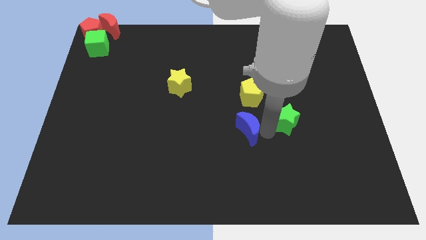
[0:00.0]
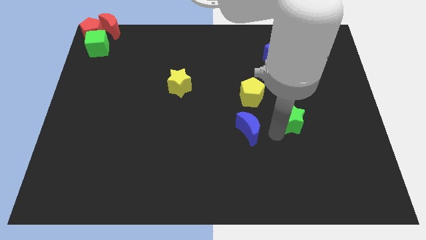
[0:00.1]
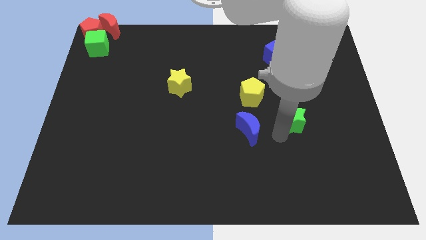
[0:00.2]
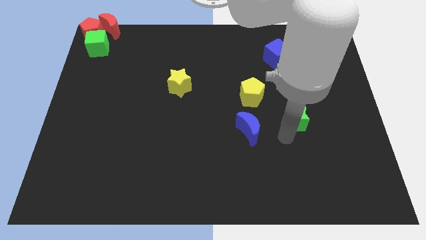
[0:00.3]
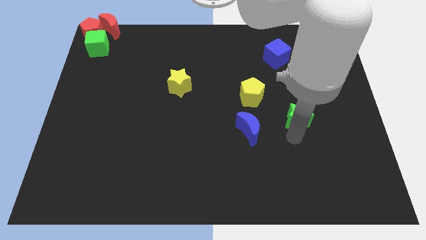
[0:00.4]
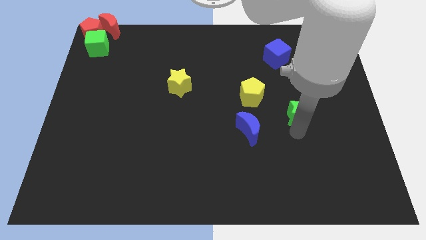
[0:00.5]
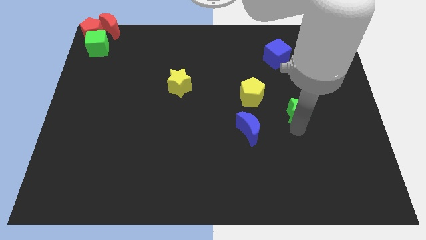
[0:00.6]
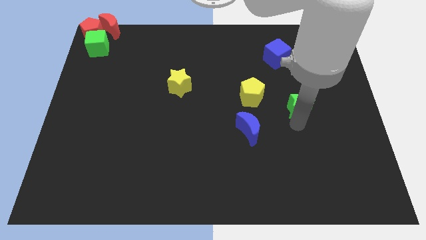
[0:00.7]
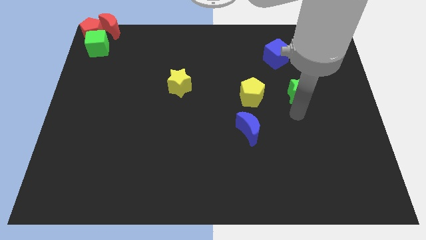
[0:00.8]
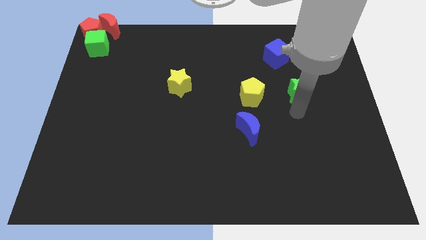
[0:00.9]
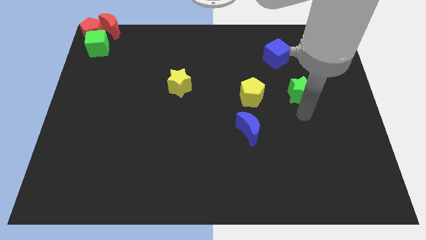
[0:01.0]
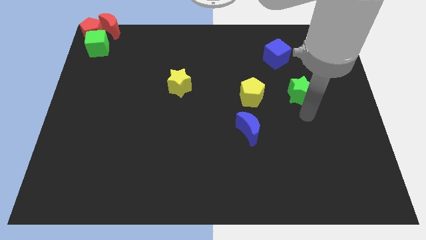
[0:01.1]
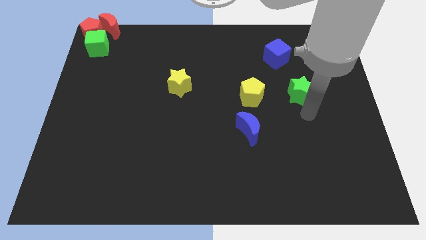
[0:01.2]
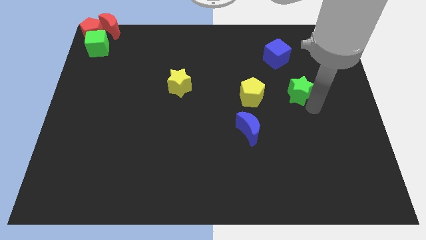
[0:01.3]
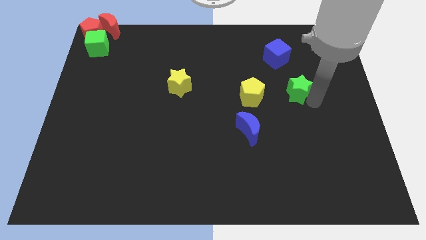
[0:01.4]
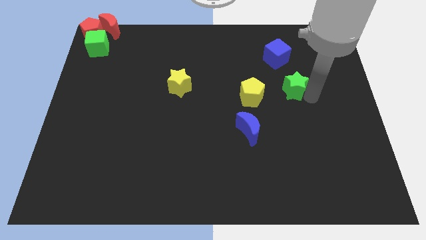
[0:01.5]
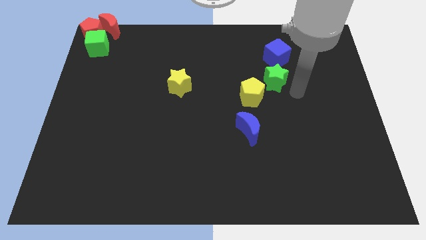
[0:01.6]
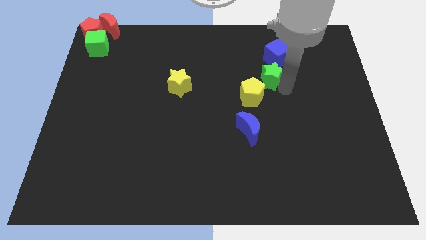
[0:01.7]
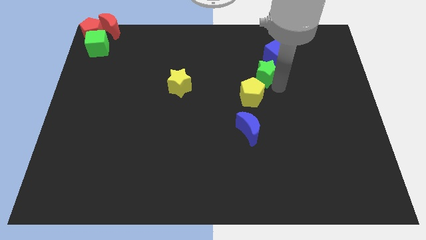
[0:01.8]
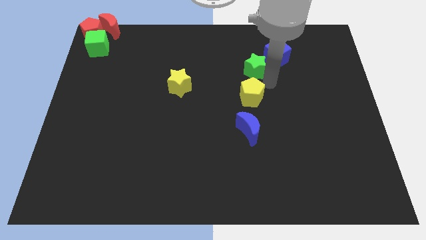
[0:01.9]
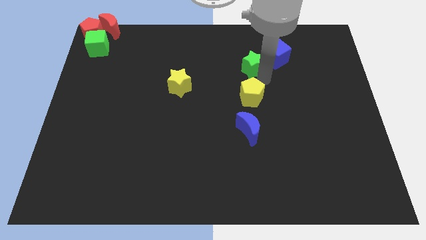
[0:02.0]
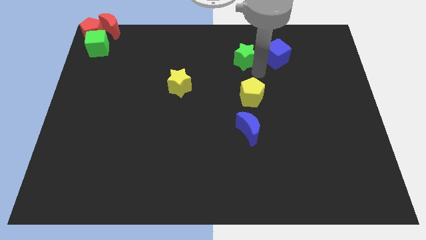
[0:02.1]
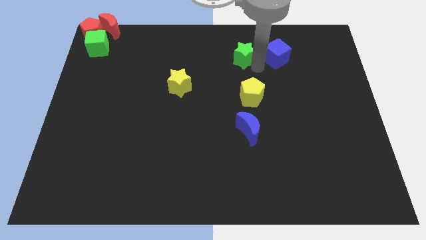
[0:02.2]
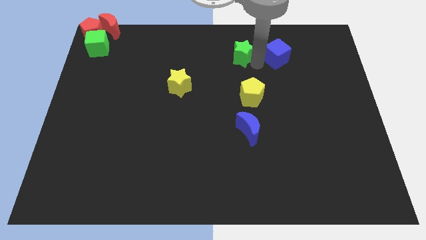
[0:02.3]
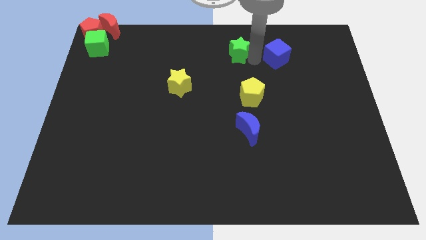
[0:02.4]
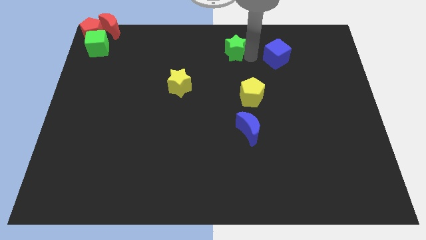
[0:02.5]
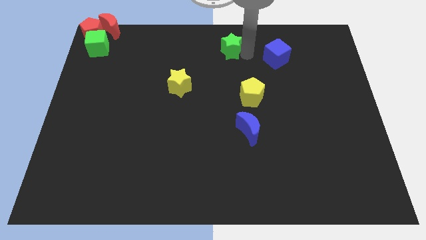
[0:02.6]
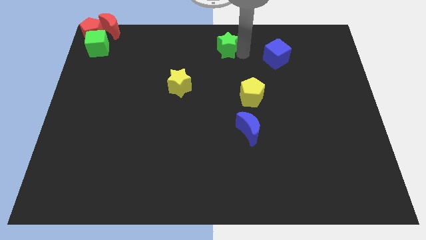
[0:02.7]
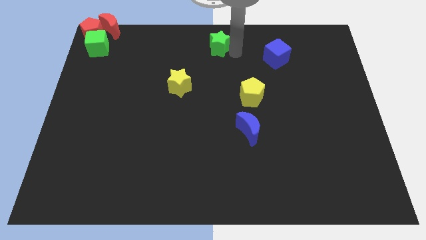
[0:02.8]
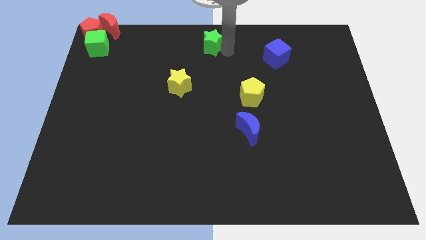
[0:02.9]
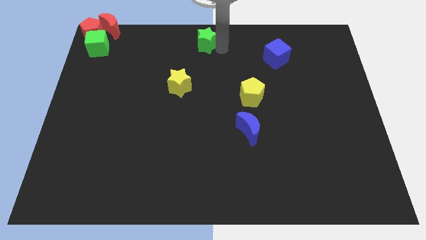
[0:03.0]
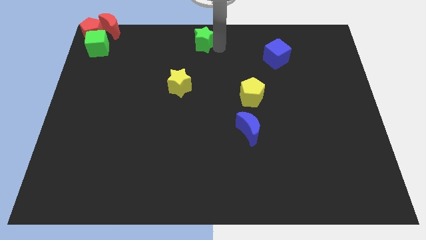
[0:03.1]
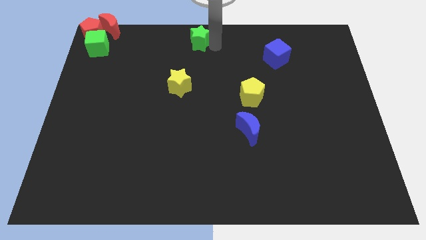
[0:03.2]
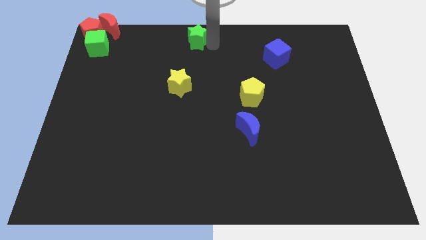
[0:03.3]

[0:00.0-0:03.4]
place green star to the top center of the board

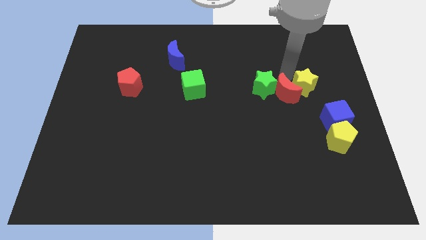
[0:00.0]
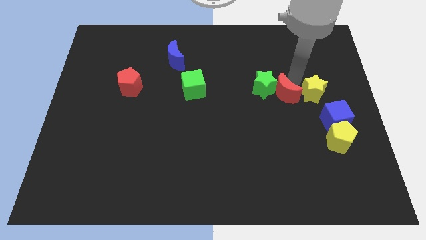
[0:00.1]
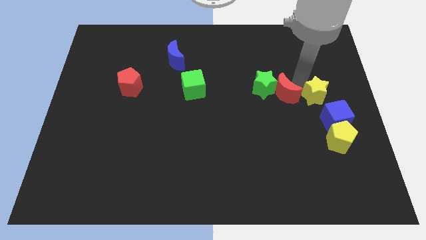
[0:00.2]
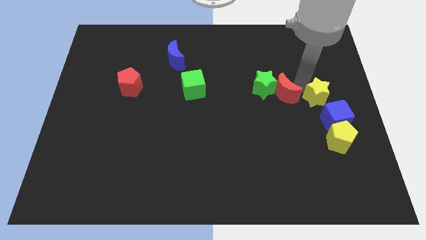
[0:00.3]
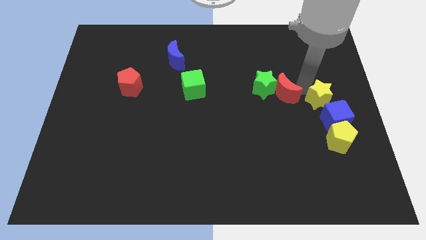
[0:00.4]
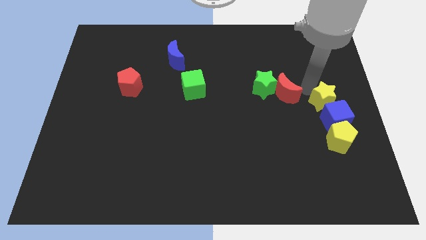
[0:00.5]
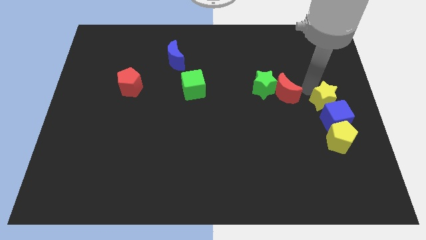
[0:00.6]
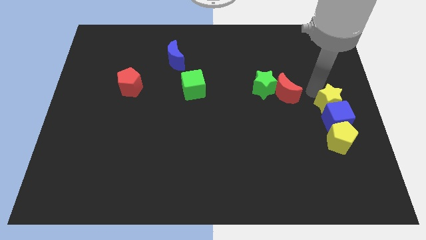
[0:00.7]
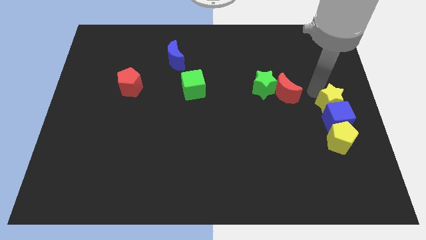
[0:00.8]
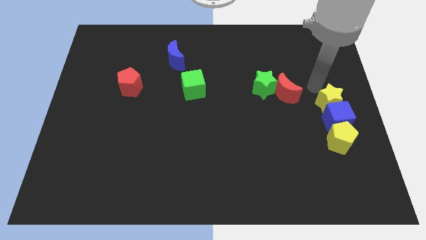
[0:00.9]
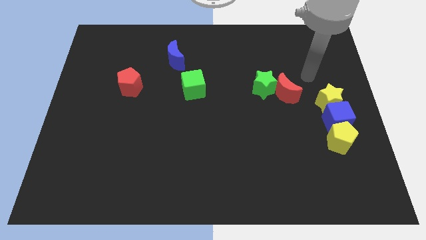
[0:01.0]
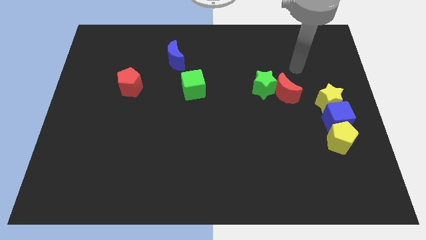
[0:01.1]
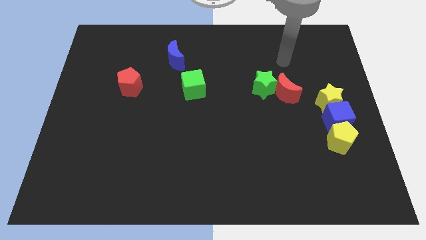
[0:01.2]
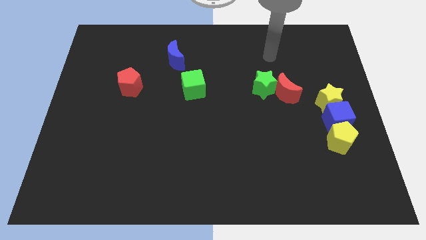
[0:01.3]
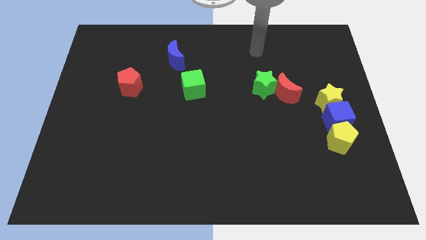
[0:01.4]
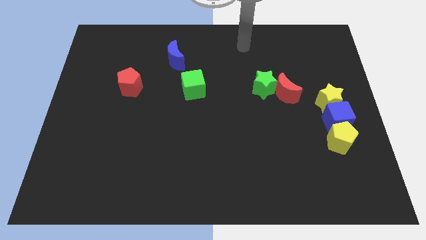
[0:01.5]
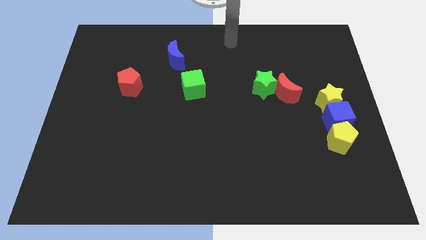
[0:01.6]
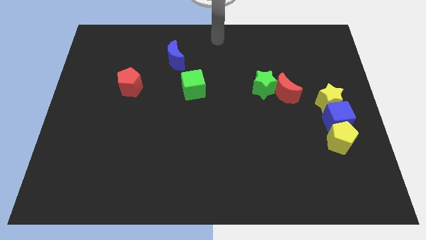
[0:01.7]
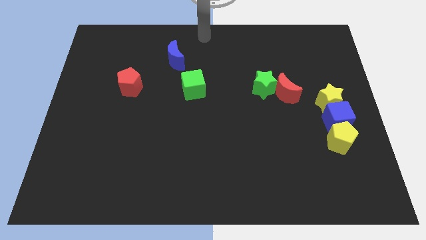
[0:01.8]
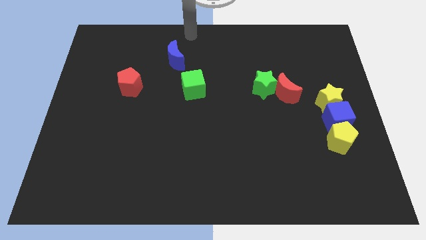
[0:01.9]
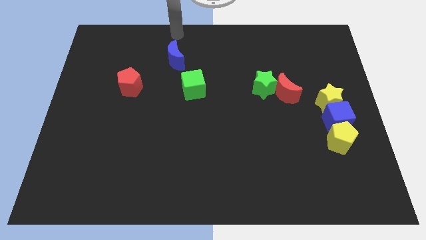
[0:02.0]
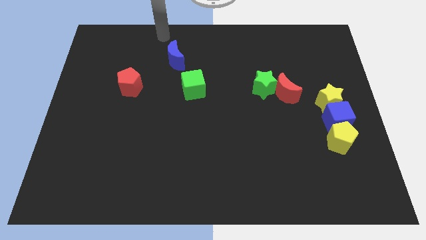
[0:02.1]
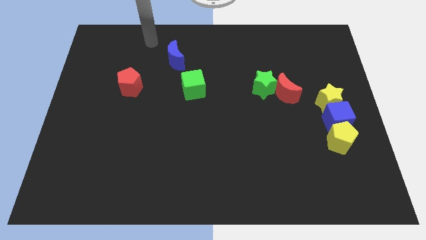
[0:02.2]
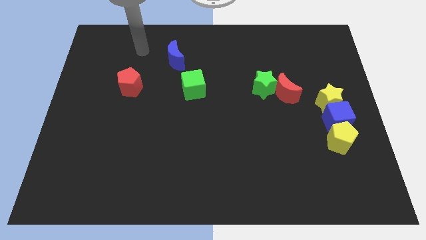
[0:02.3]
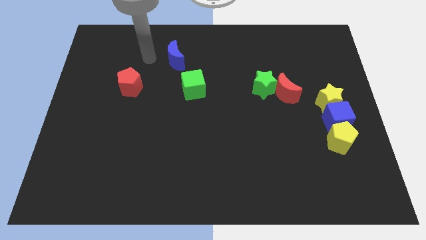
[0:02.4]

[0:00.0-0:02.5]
move yellow star into the blue cube

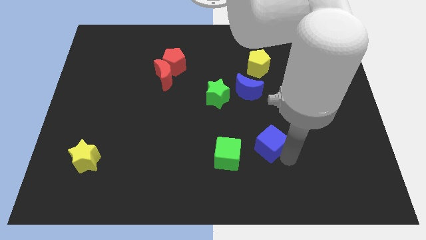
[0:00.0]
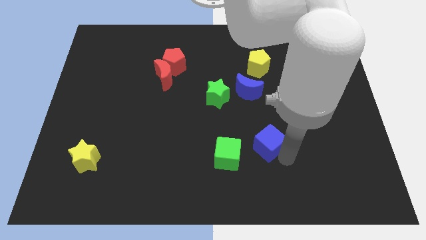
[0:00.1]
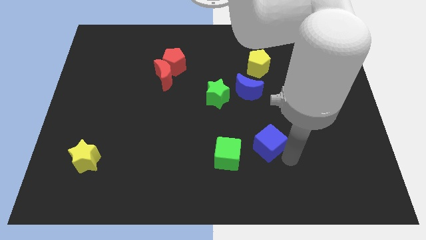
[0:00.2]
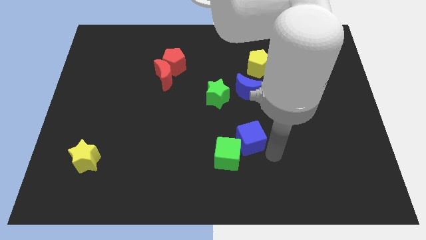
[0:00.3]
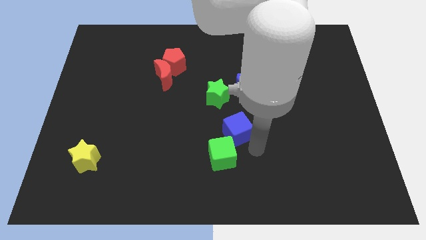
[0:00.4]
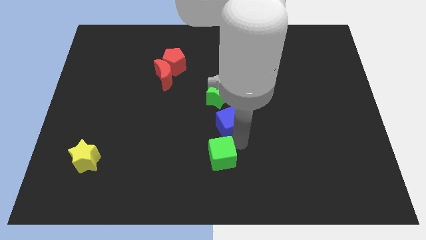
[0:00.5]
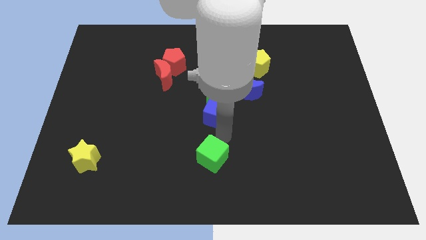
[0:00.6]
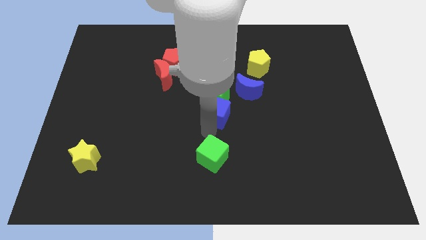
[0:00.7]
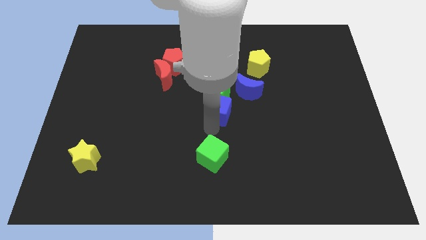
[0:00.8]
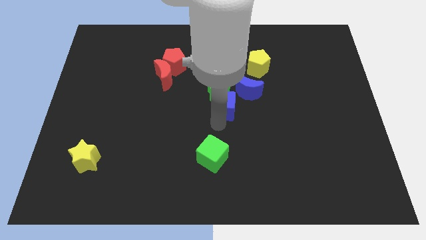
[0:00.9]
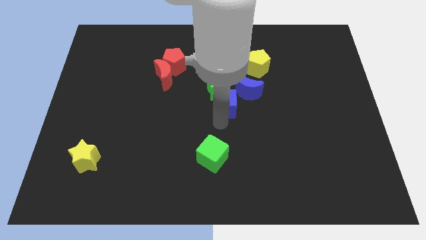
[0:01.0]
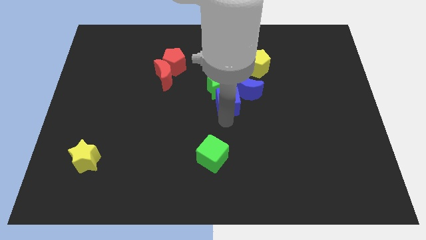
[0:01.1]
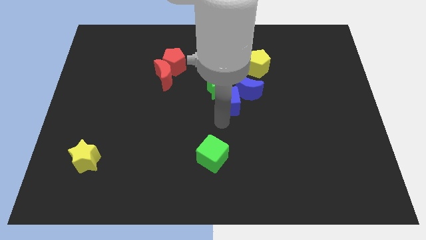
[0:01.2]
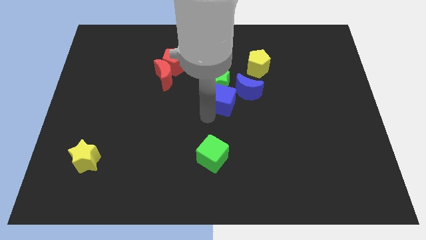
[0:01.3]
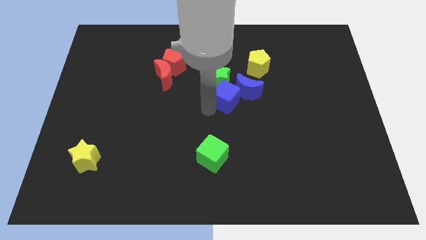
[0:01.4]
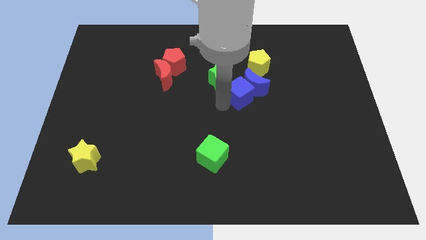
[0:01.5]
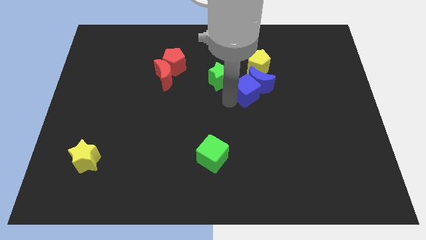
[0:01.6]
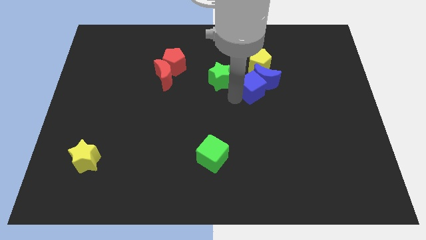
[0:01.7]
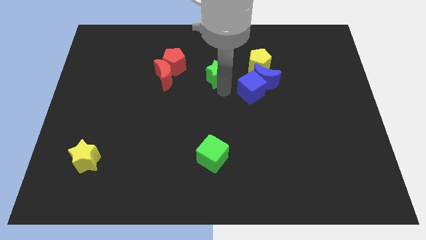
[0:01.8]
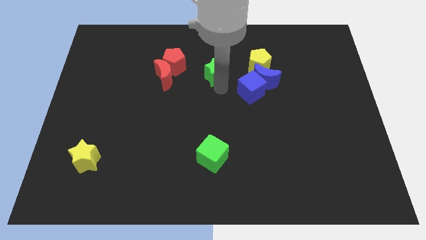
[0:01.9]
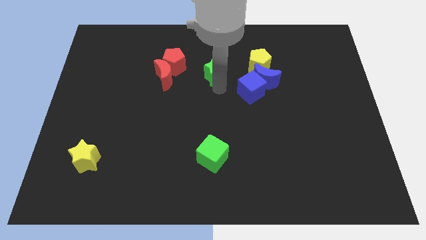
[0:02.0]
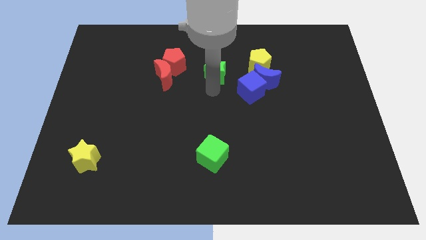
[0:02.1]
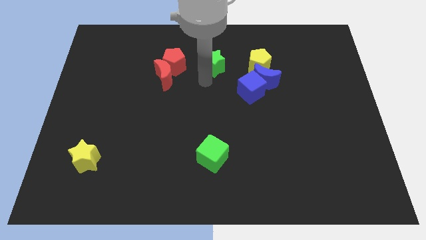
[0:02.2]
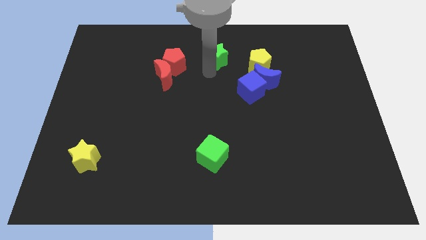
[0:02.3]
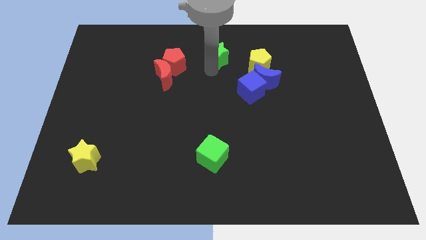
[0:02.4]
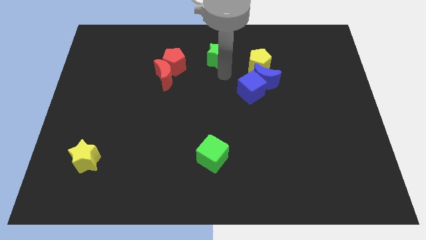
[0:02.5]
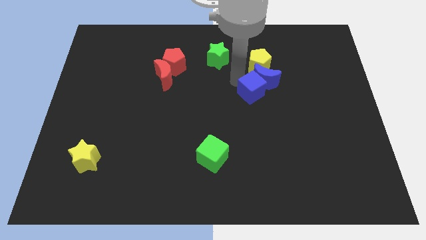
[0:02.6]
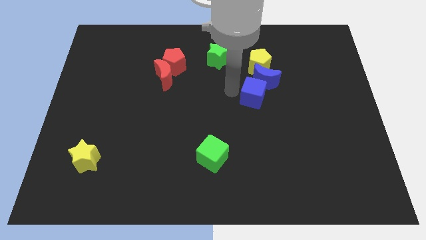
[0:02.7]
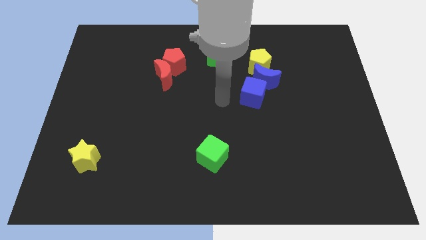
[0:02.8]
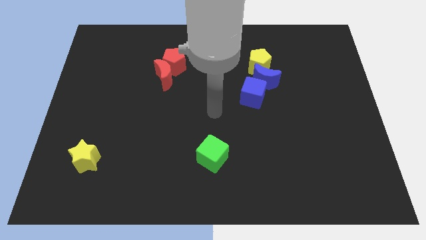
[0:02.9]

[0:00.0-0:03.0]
slightly touch left to the blue cube

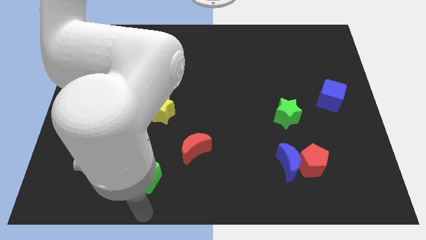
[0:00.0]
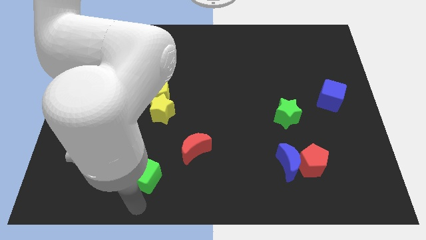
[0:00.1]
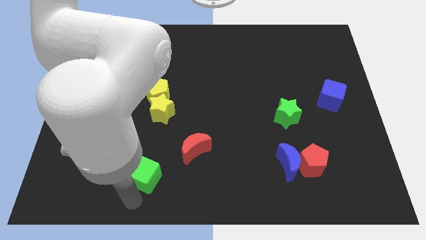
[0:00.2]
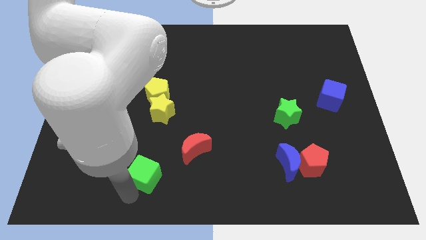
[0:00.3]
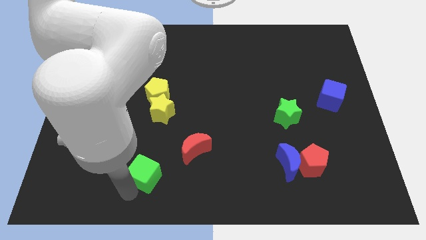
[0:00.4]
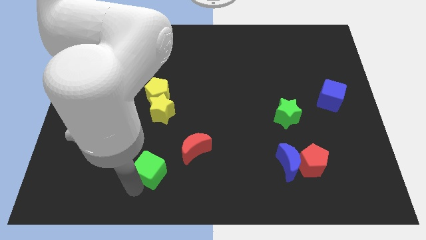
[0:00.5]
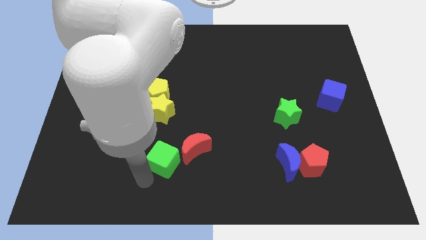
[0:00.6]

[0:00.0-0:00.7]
slightly push the green cube towards the red moon
